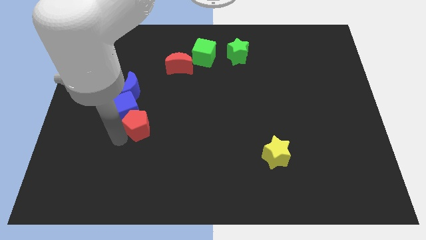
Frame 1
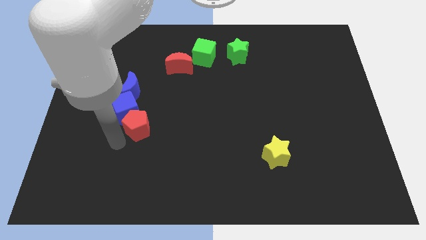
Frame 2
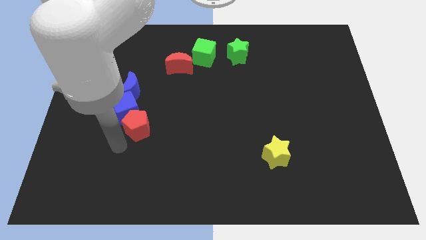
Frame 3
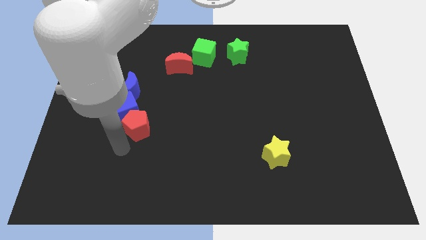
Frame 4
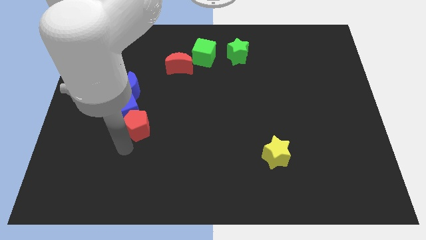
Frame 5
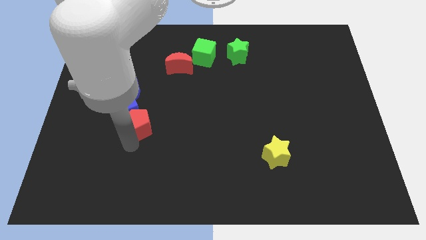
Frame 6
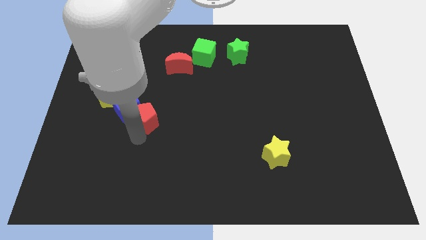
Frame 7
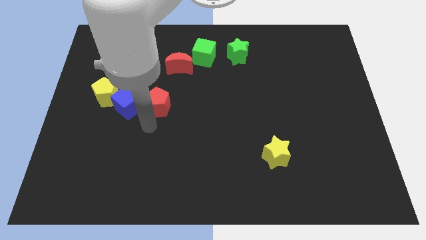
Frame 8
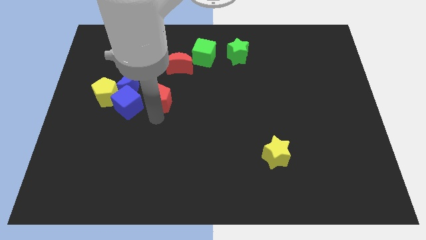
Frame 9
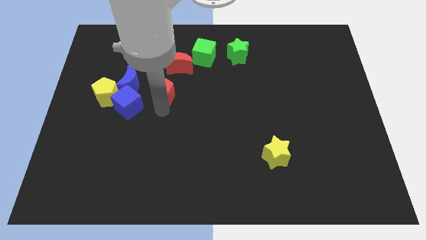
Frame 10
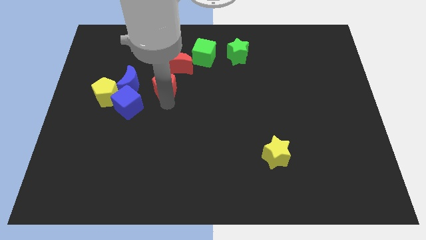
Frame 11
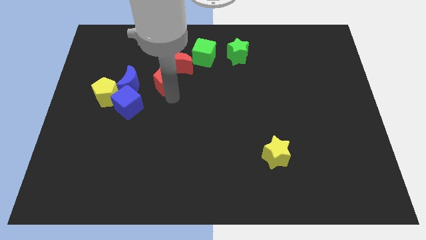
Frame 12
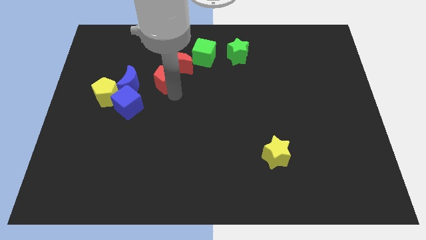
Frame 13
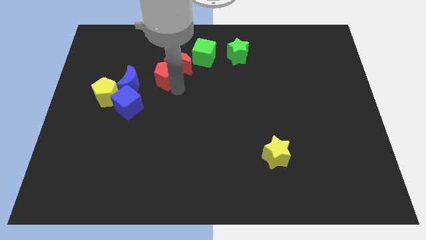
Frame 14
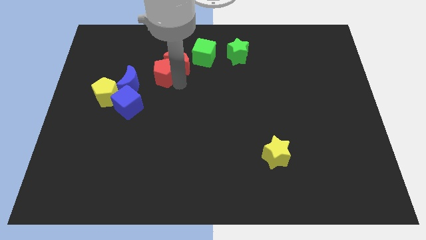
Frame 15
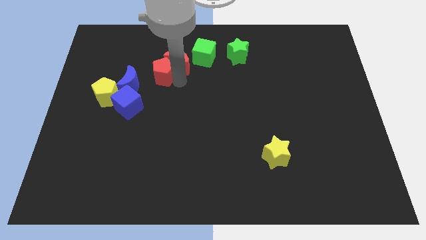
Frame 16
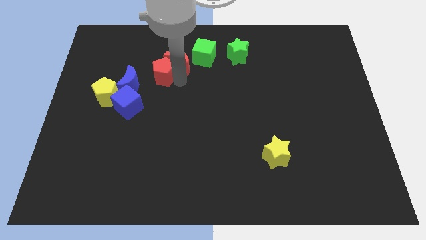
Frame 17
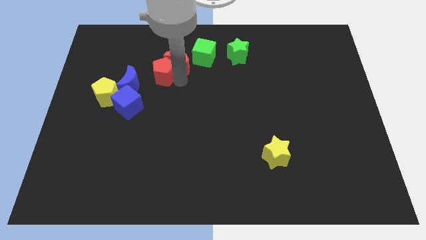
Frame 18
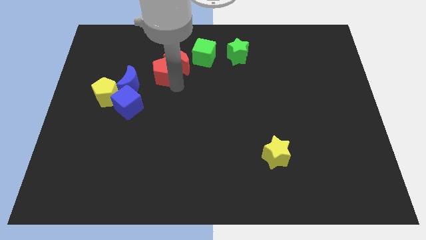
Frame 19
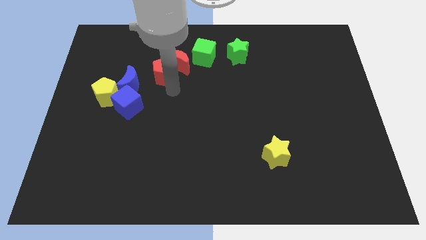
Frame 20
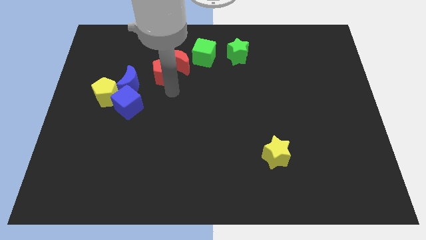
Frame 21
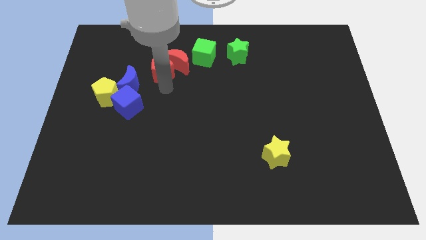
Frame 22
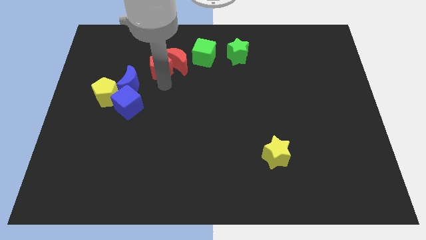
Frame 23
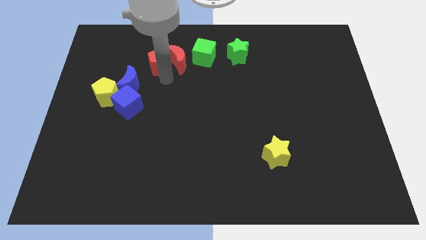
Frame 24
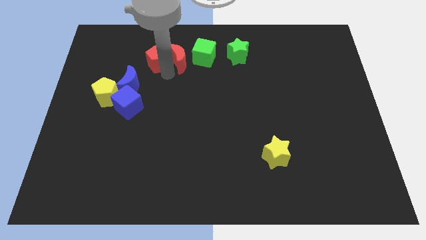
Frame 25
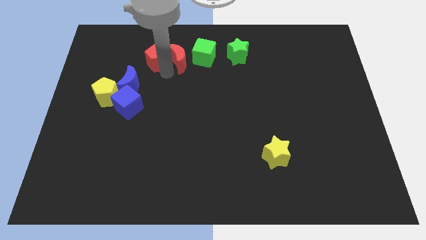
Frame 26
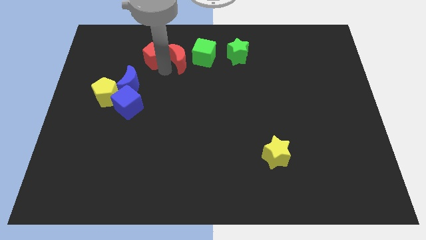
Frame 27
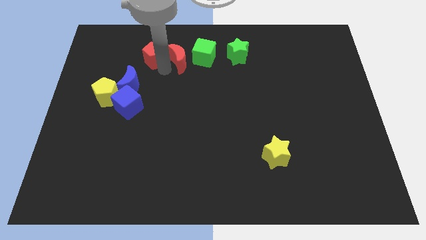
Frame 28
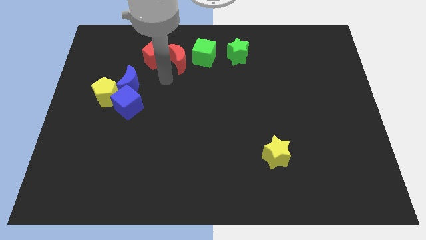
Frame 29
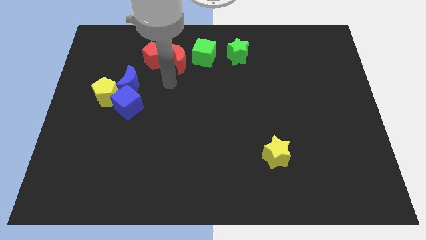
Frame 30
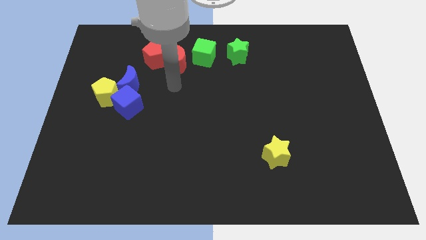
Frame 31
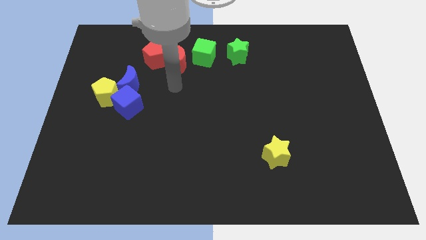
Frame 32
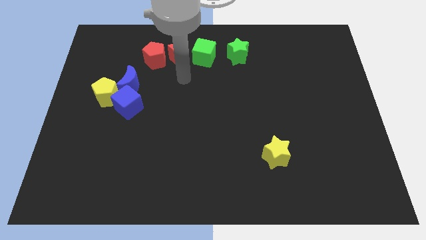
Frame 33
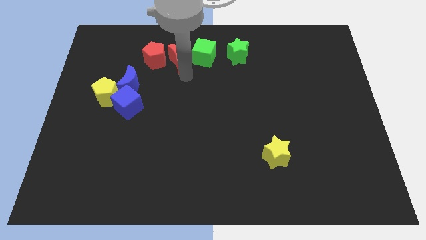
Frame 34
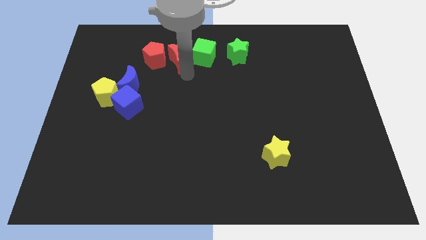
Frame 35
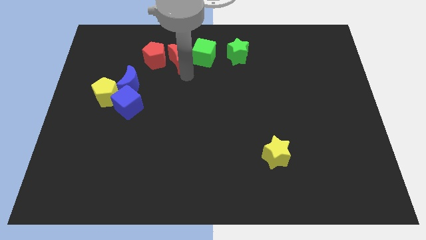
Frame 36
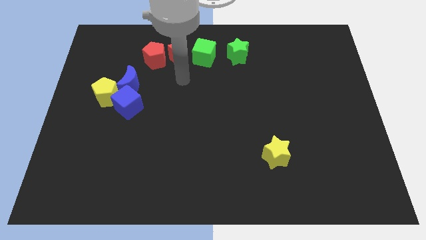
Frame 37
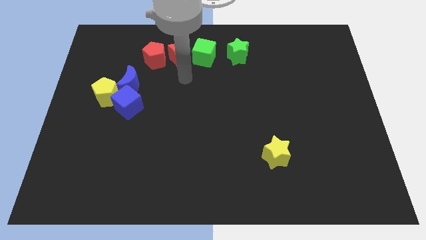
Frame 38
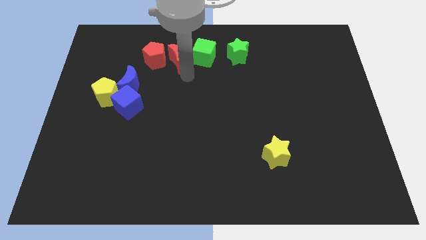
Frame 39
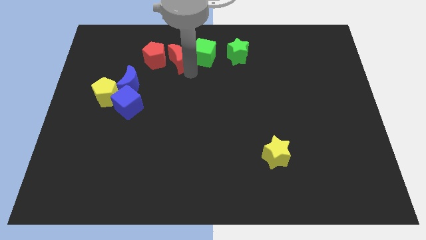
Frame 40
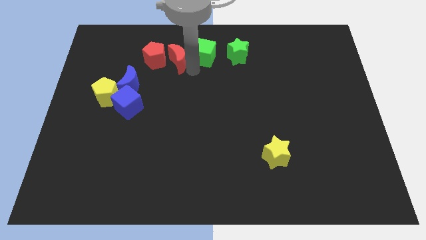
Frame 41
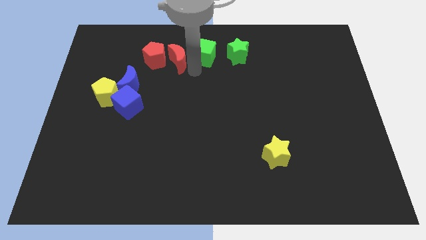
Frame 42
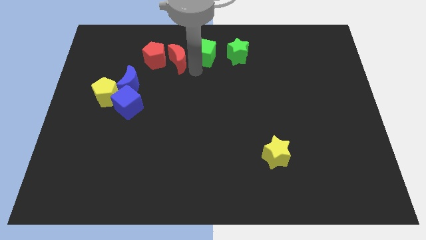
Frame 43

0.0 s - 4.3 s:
push red pentagon into the red moon

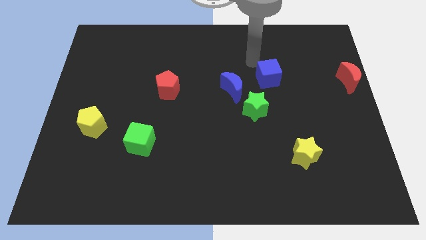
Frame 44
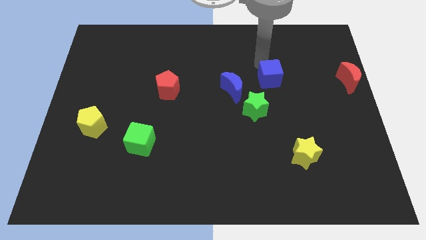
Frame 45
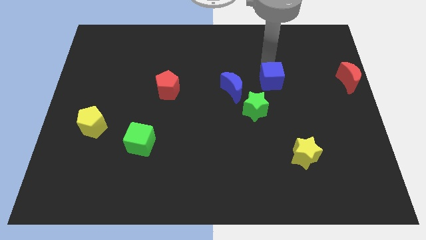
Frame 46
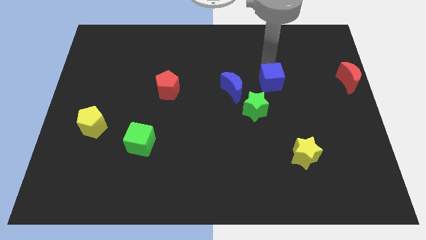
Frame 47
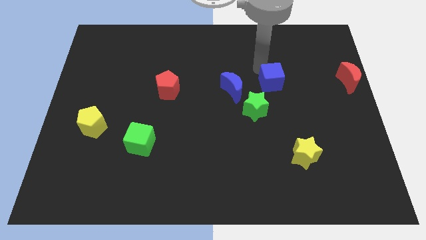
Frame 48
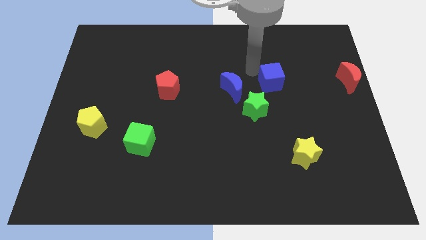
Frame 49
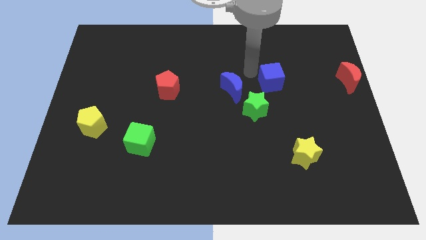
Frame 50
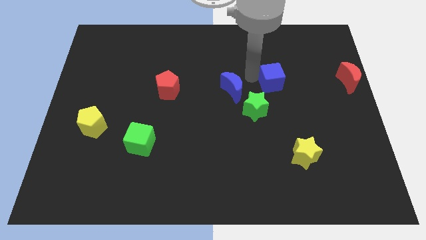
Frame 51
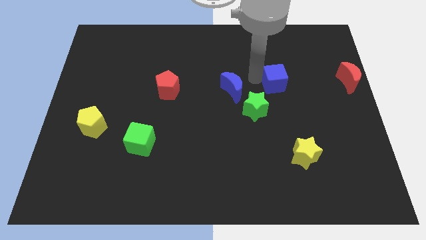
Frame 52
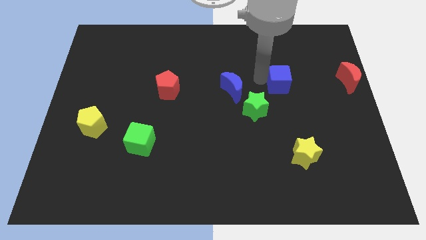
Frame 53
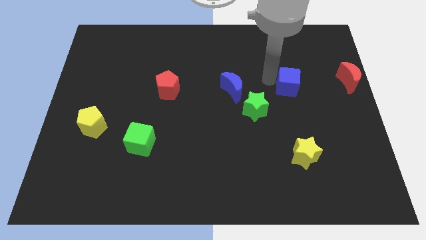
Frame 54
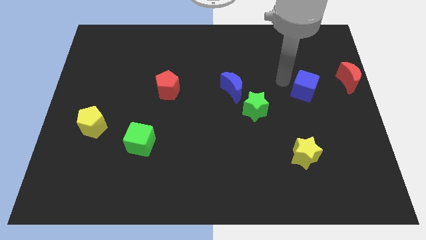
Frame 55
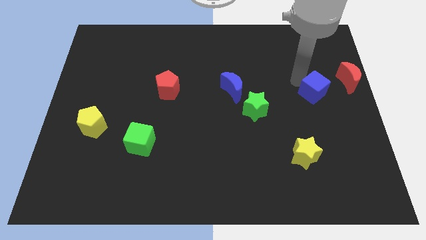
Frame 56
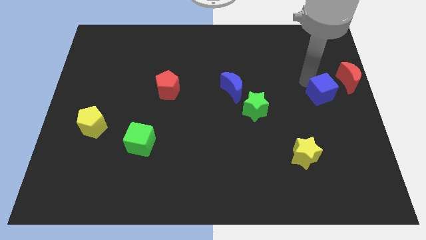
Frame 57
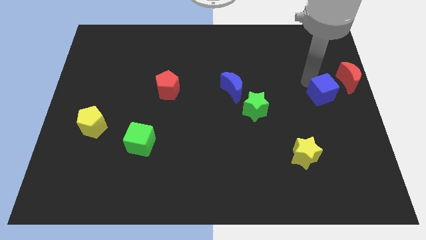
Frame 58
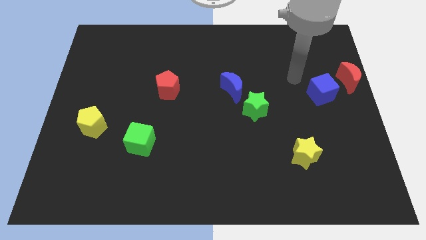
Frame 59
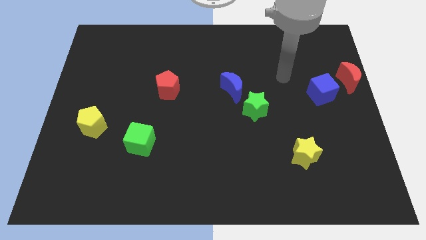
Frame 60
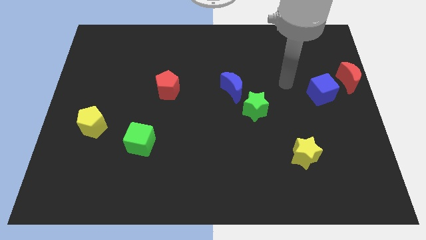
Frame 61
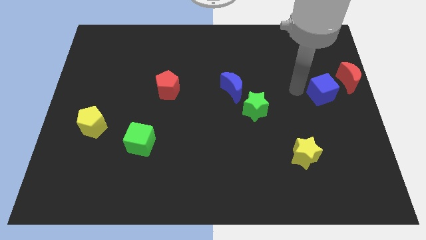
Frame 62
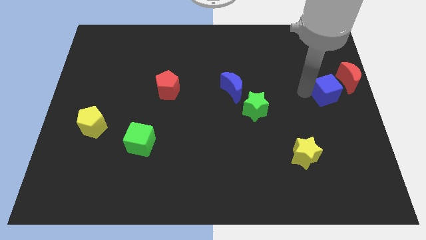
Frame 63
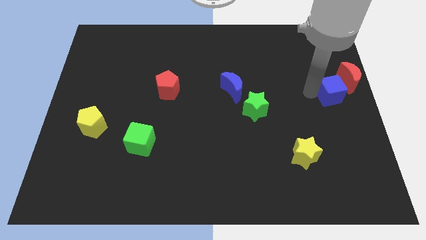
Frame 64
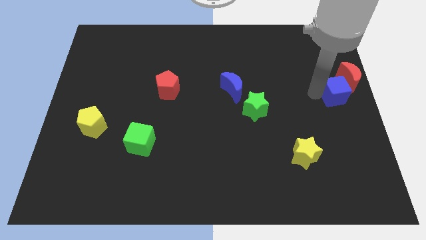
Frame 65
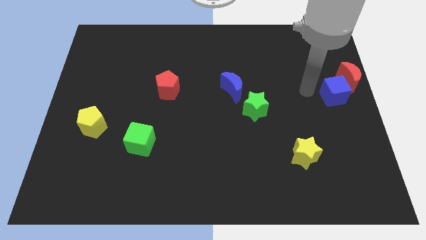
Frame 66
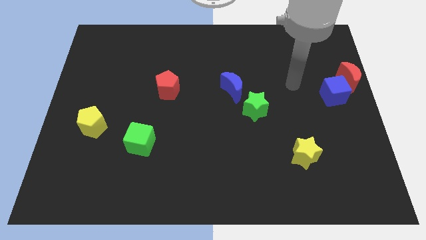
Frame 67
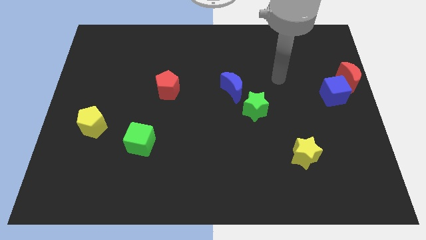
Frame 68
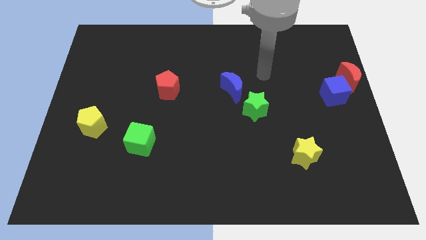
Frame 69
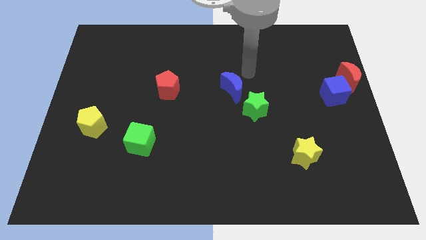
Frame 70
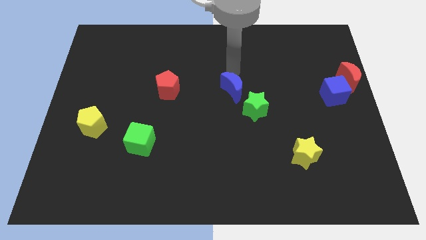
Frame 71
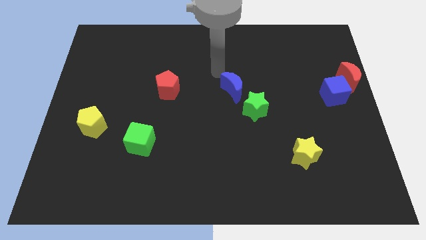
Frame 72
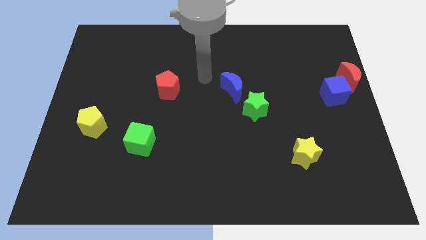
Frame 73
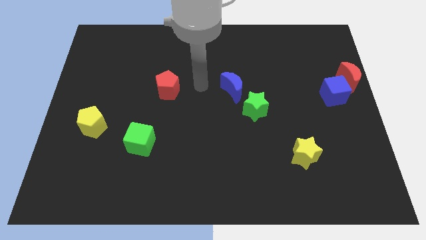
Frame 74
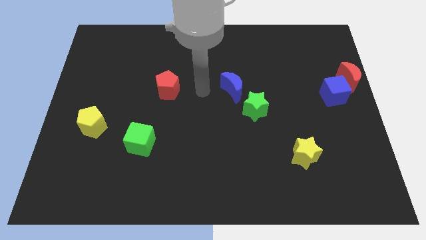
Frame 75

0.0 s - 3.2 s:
push the blue cube into the red moon

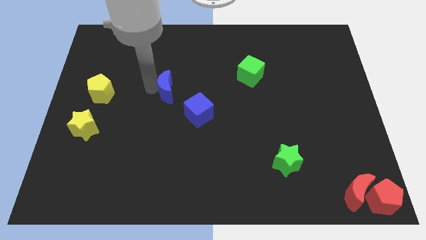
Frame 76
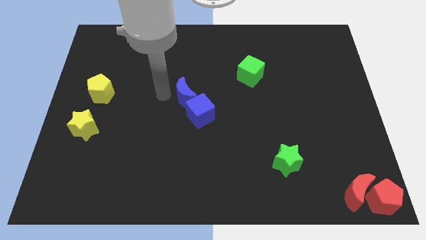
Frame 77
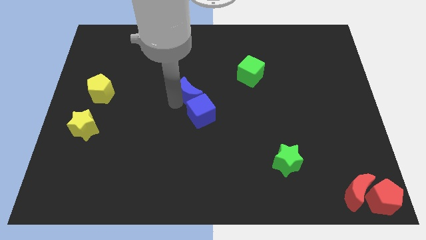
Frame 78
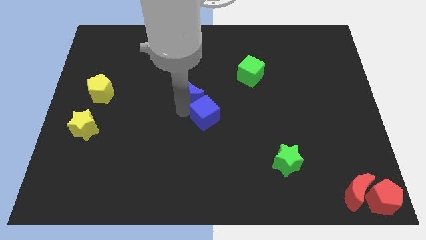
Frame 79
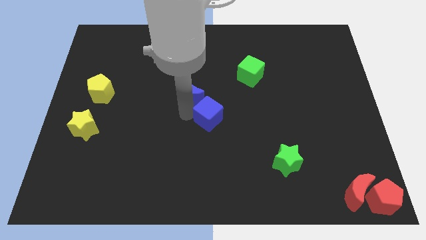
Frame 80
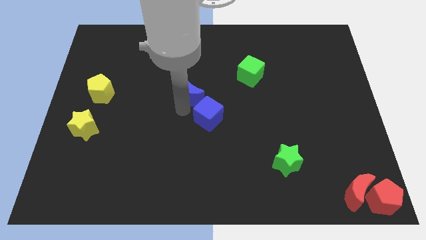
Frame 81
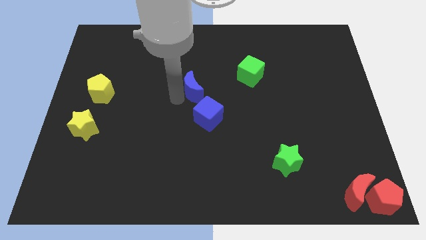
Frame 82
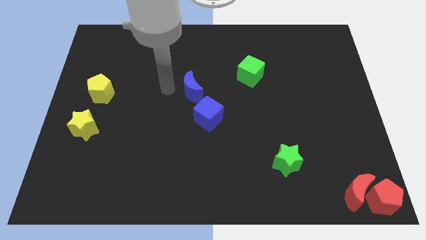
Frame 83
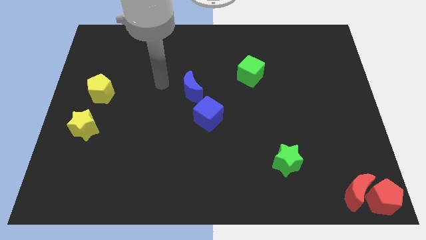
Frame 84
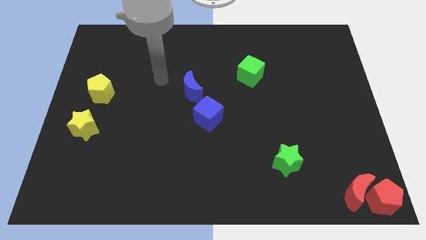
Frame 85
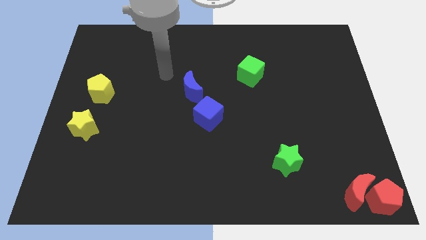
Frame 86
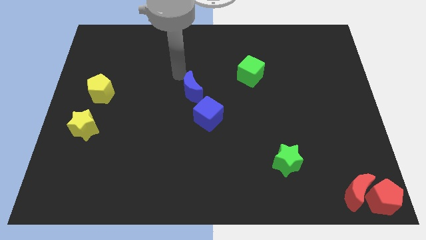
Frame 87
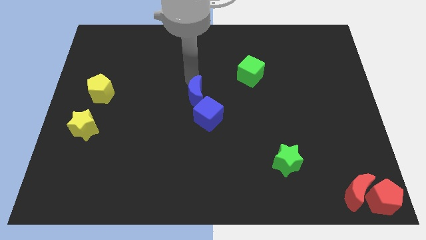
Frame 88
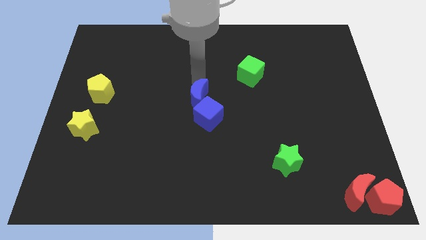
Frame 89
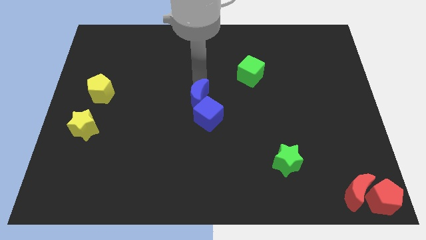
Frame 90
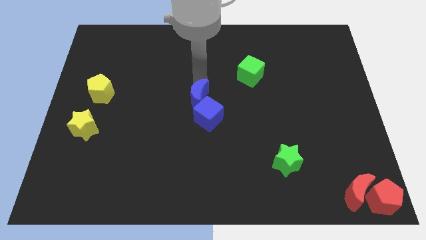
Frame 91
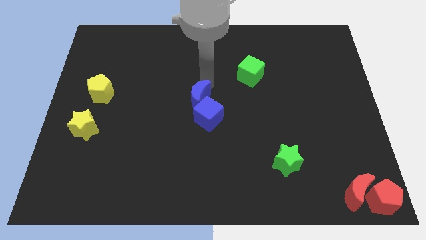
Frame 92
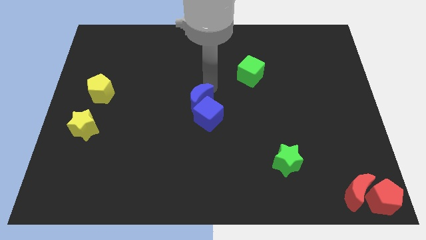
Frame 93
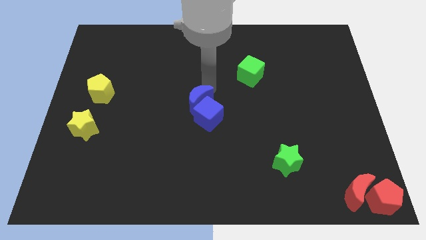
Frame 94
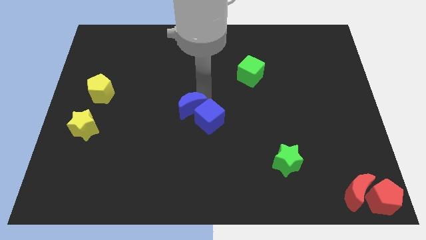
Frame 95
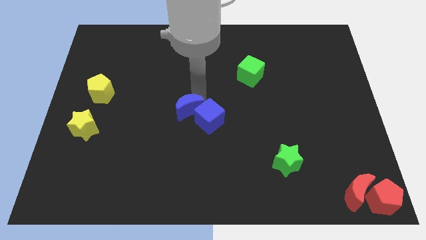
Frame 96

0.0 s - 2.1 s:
push blue moon in to blue cube
